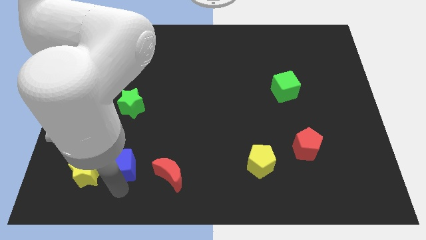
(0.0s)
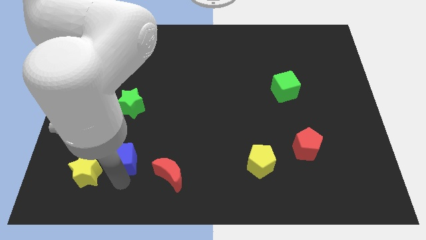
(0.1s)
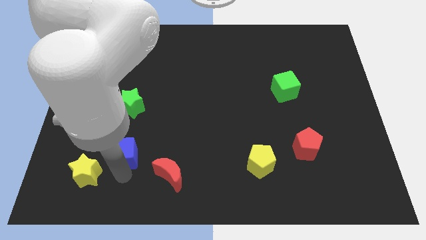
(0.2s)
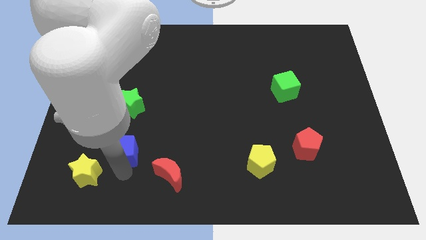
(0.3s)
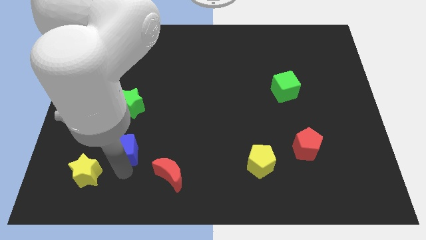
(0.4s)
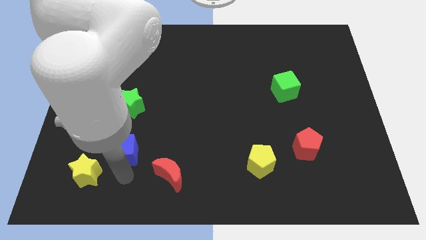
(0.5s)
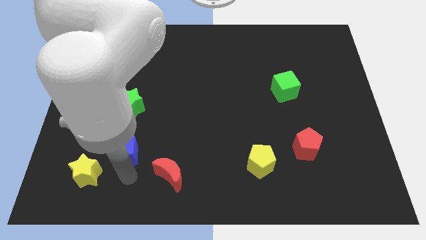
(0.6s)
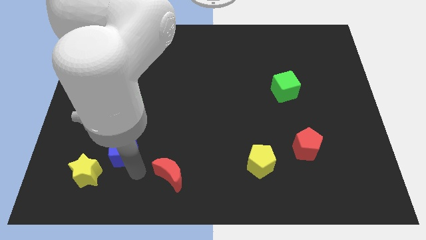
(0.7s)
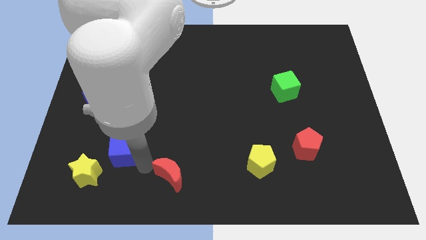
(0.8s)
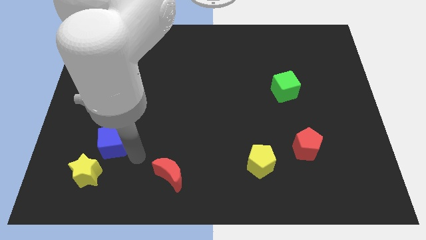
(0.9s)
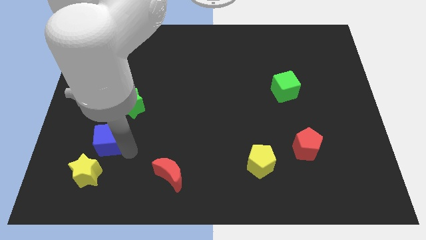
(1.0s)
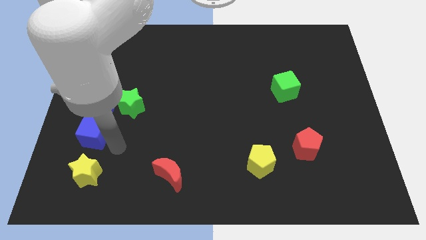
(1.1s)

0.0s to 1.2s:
place the blue cube in between the yellow star and blue crescent

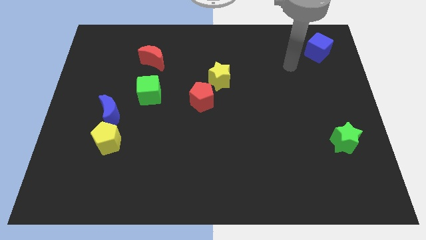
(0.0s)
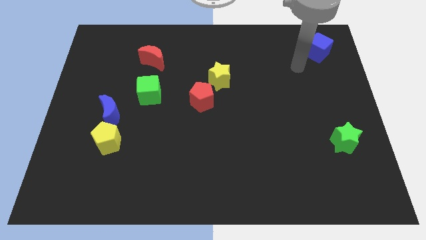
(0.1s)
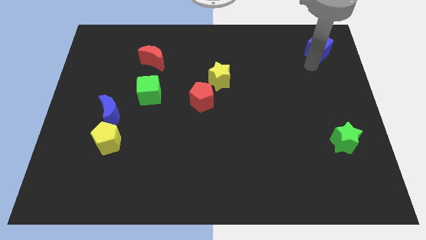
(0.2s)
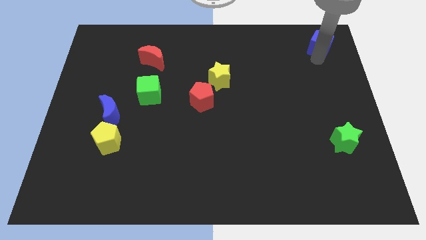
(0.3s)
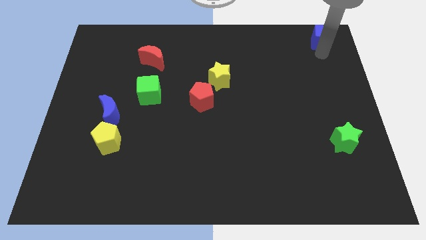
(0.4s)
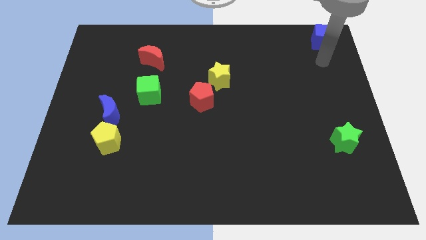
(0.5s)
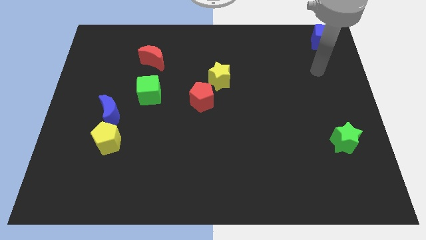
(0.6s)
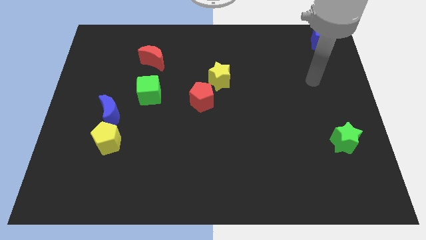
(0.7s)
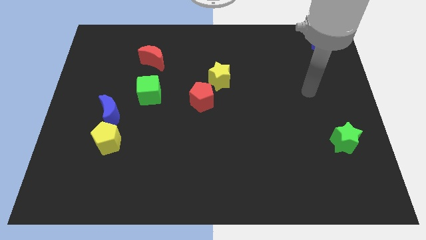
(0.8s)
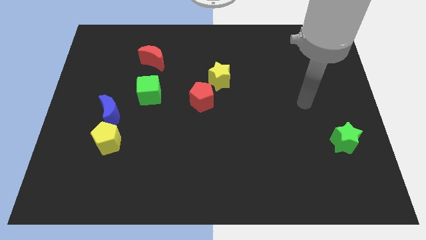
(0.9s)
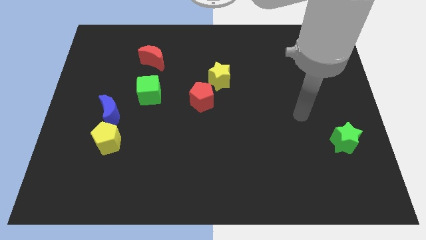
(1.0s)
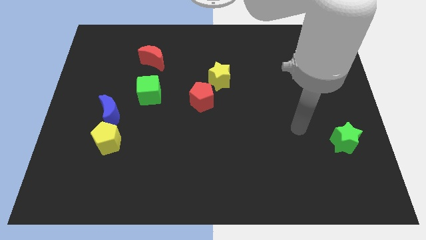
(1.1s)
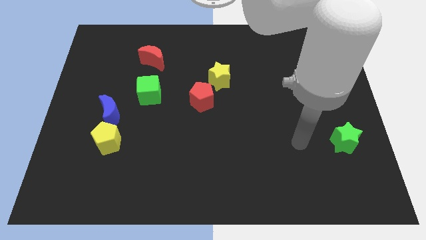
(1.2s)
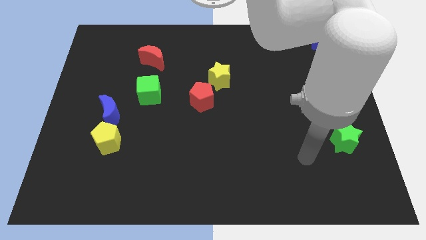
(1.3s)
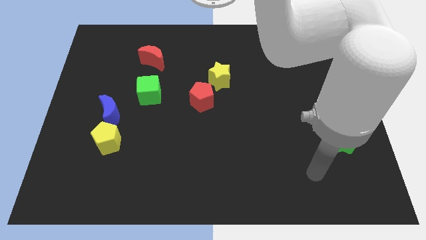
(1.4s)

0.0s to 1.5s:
push the blue cube slightly to the top and move away from it

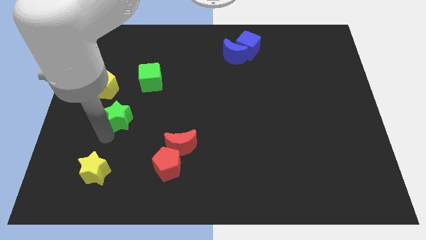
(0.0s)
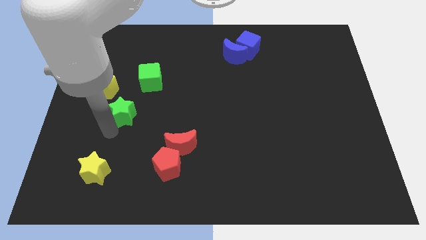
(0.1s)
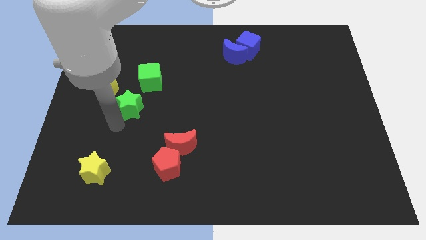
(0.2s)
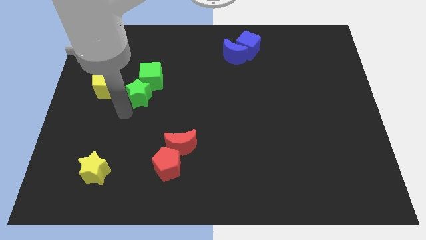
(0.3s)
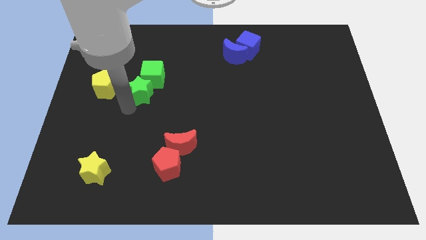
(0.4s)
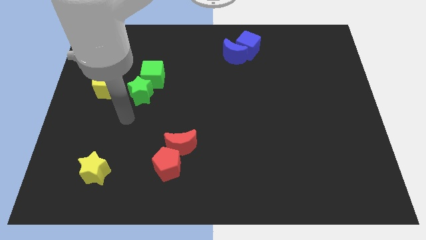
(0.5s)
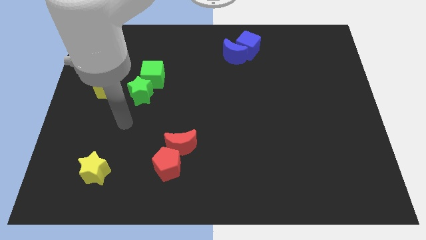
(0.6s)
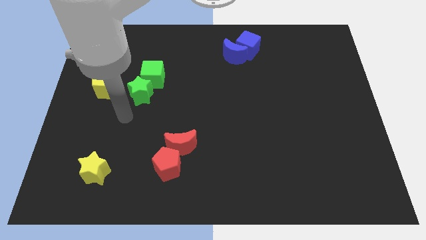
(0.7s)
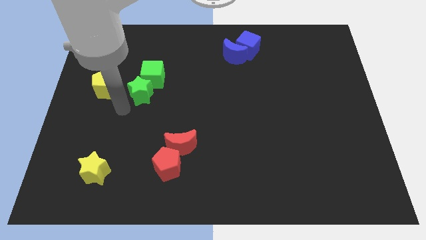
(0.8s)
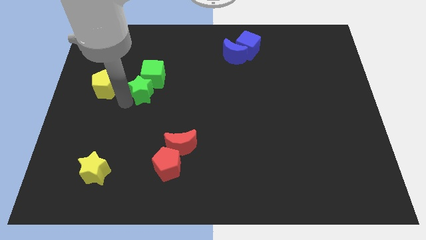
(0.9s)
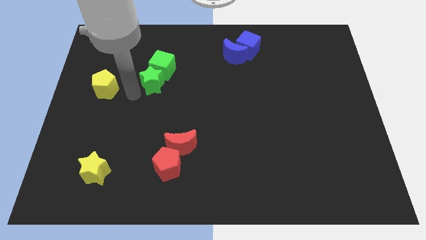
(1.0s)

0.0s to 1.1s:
slide the green star into the green cube

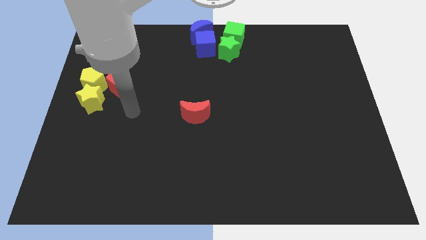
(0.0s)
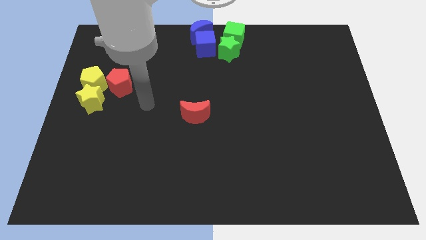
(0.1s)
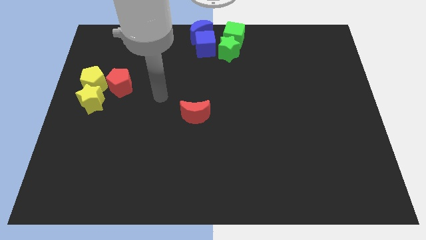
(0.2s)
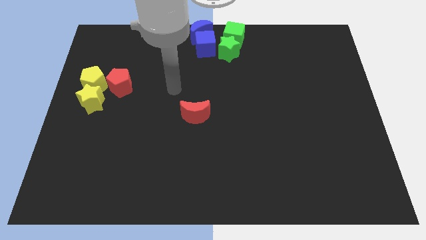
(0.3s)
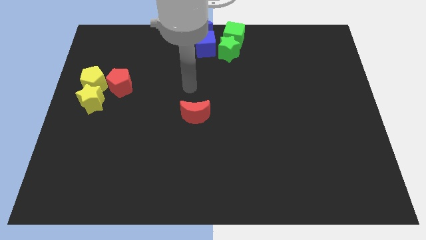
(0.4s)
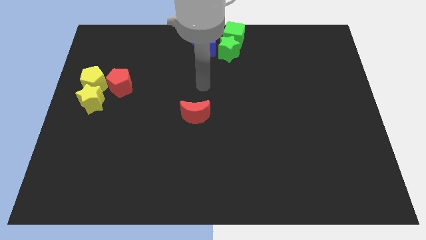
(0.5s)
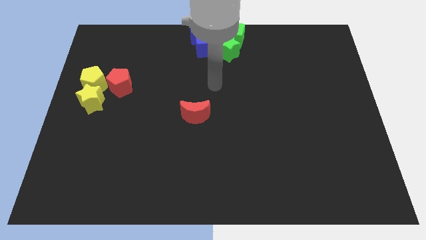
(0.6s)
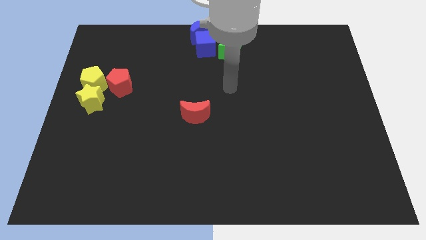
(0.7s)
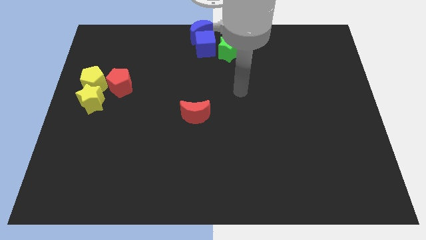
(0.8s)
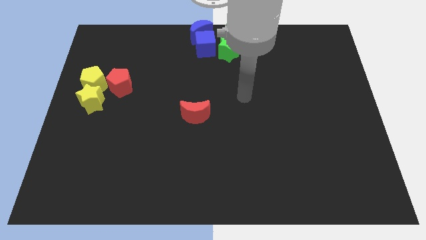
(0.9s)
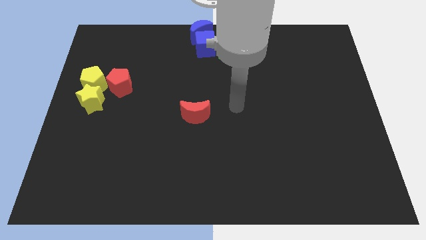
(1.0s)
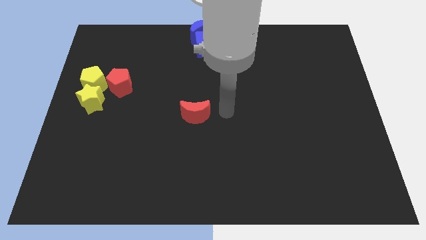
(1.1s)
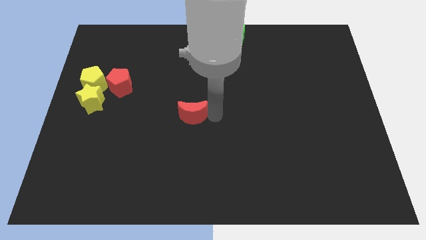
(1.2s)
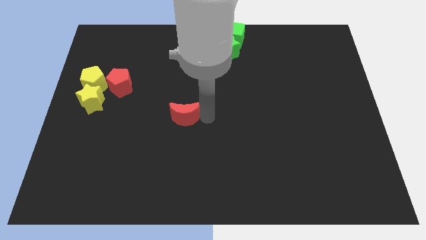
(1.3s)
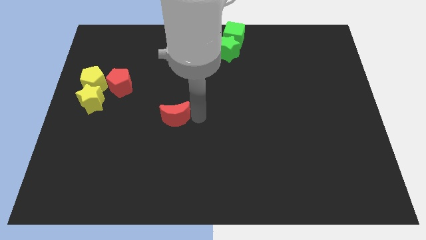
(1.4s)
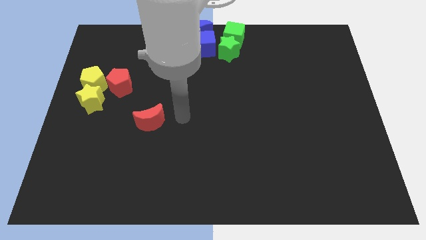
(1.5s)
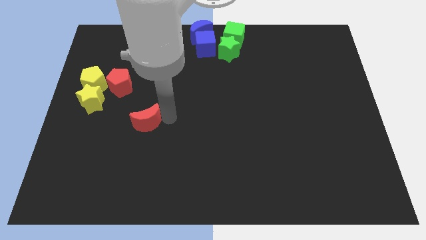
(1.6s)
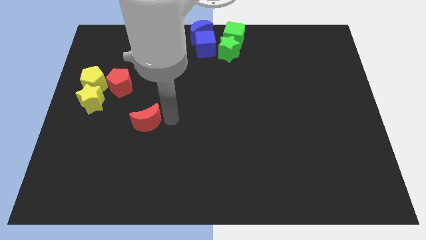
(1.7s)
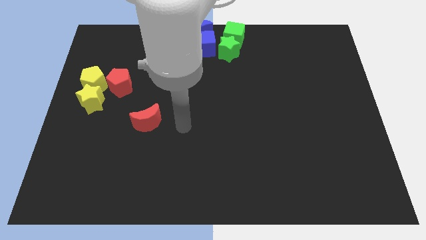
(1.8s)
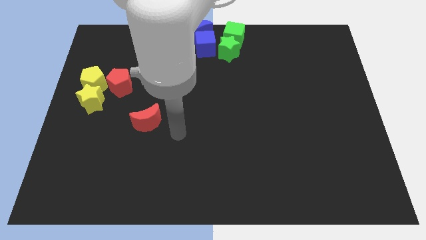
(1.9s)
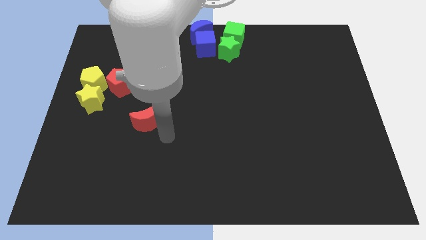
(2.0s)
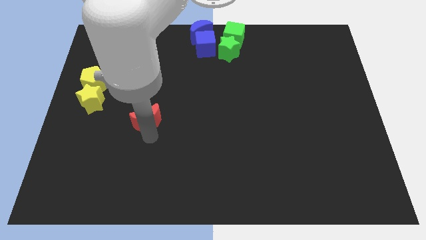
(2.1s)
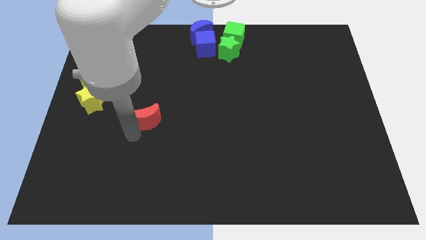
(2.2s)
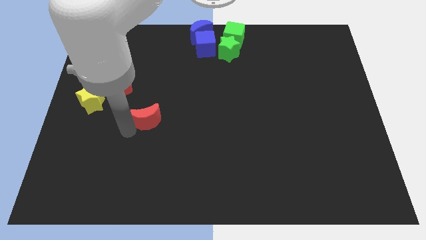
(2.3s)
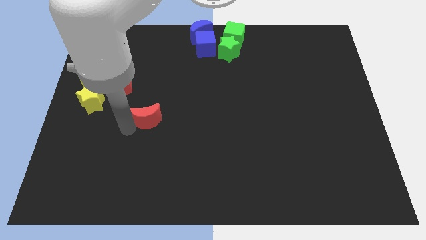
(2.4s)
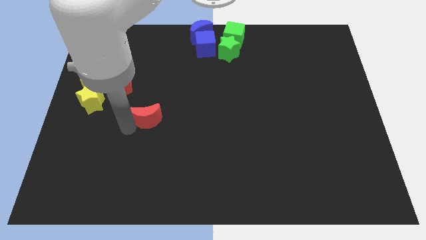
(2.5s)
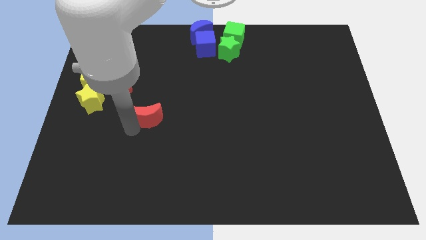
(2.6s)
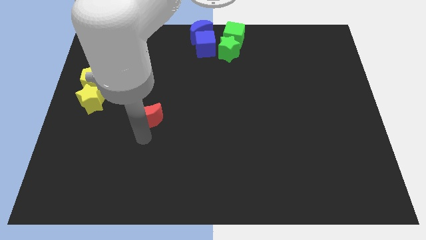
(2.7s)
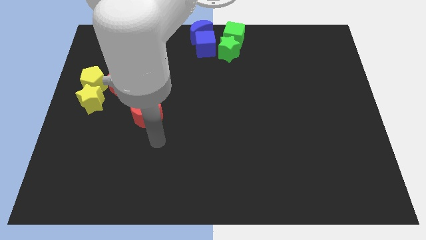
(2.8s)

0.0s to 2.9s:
move the red crescent slightly to the left

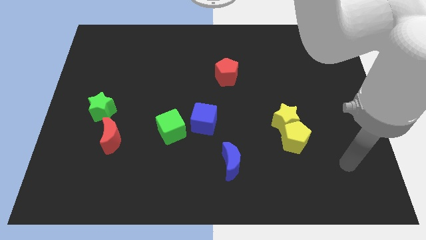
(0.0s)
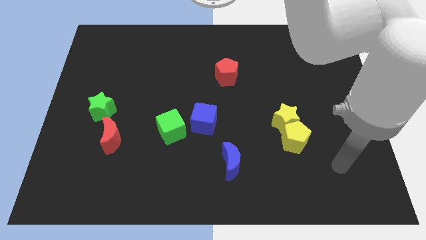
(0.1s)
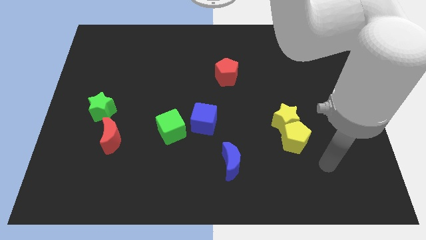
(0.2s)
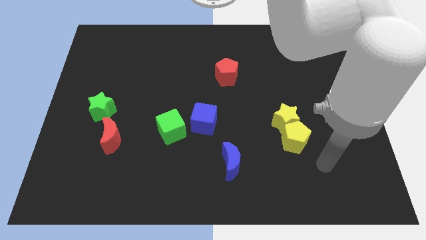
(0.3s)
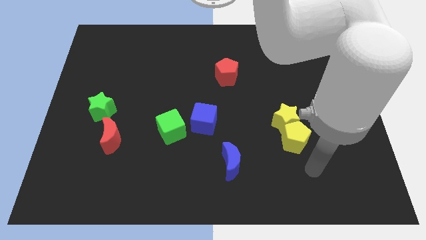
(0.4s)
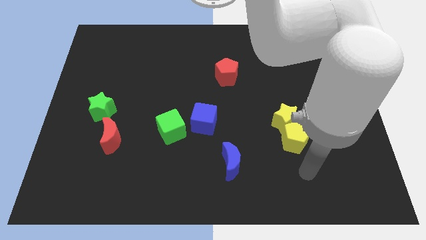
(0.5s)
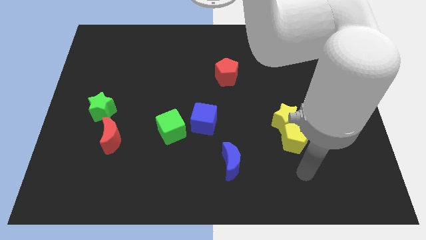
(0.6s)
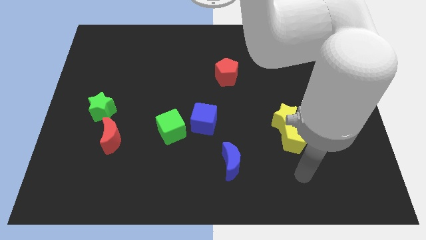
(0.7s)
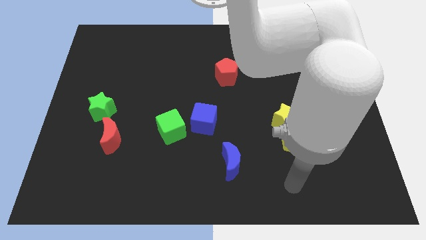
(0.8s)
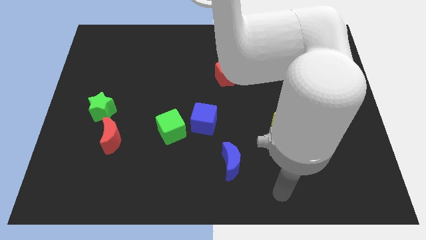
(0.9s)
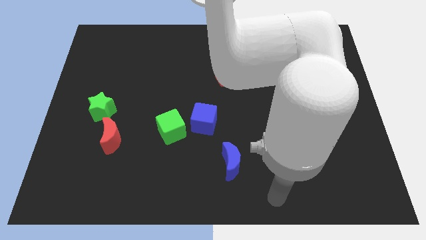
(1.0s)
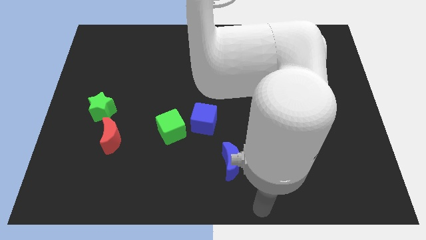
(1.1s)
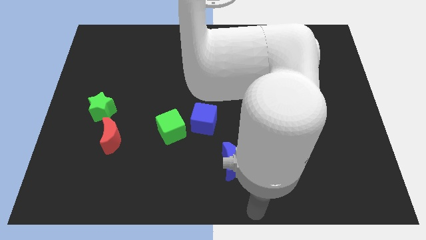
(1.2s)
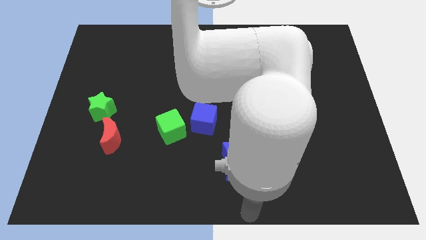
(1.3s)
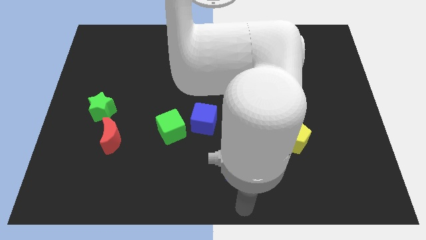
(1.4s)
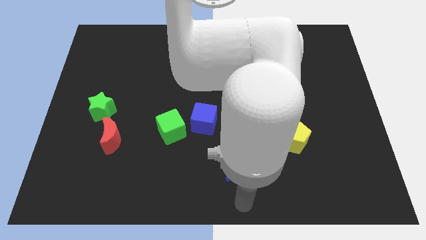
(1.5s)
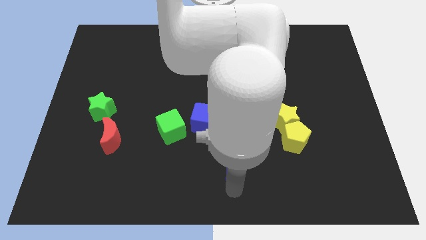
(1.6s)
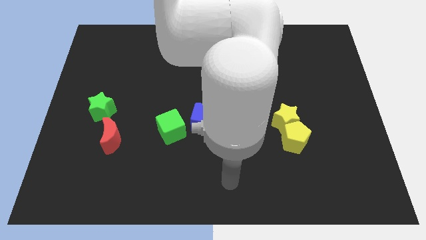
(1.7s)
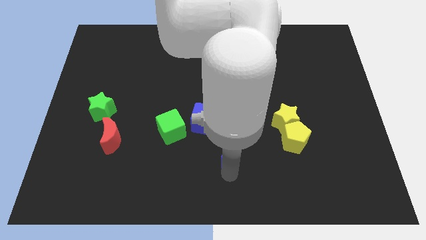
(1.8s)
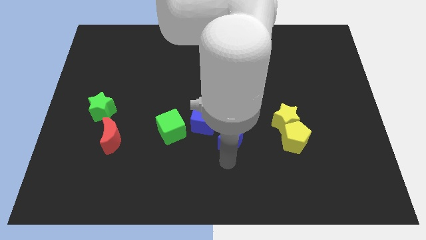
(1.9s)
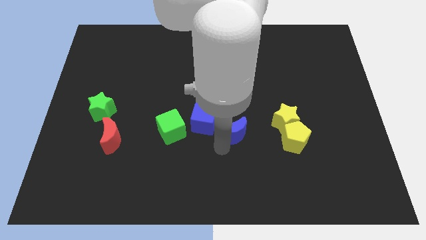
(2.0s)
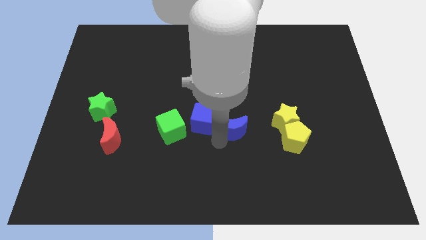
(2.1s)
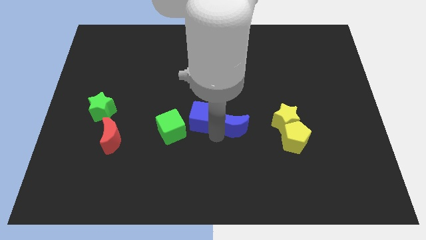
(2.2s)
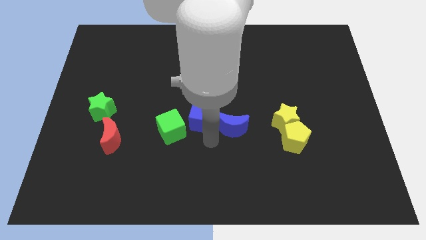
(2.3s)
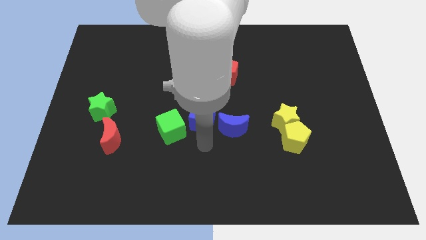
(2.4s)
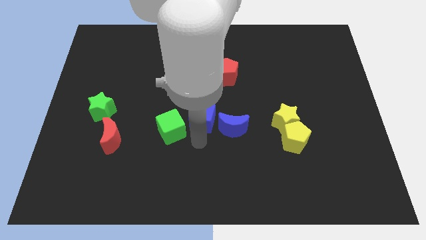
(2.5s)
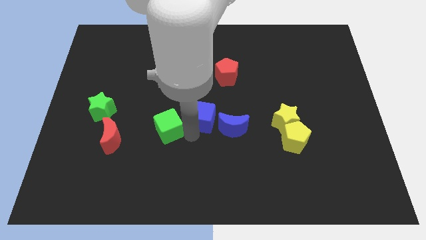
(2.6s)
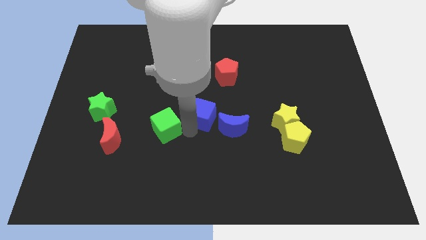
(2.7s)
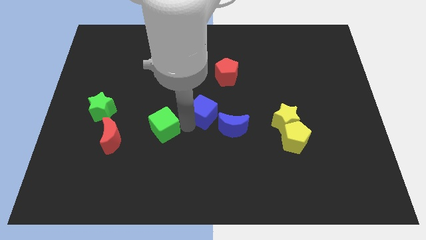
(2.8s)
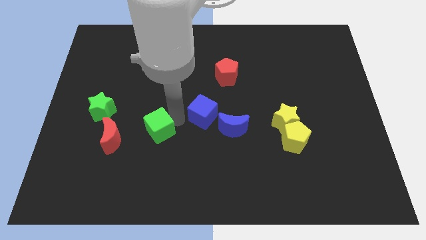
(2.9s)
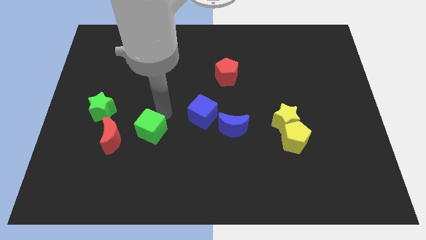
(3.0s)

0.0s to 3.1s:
push the blue crescent right to the blue cube
